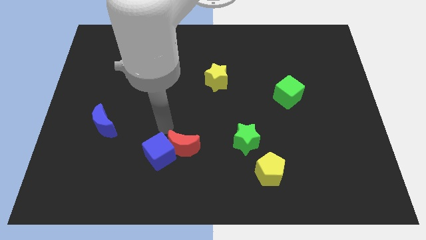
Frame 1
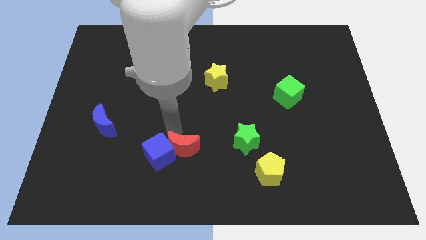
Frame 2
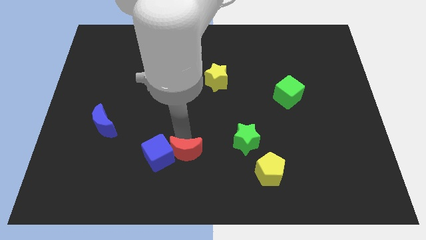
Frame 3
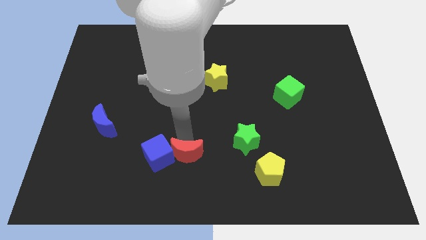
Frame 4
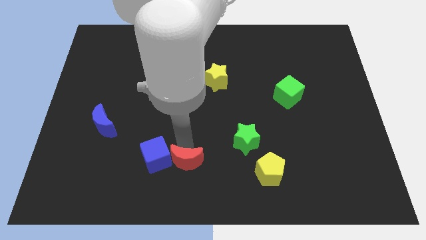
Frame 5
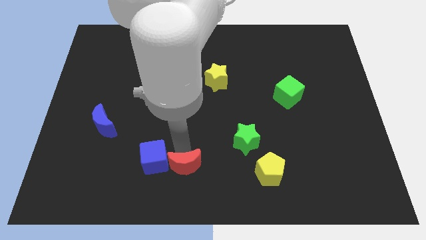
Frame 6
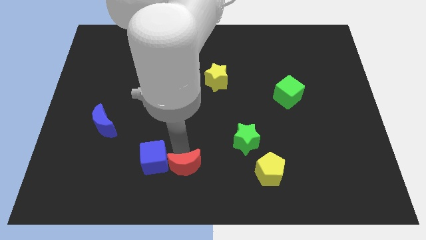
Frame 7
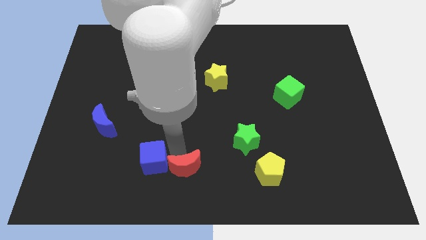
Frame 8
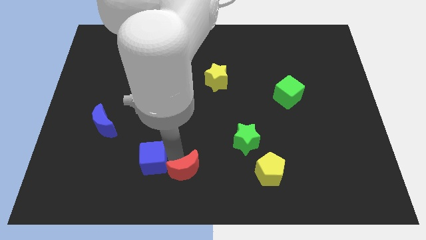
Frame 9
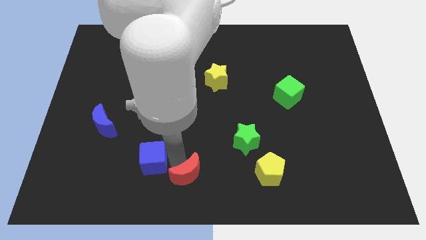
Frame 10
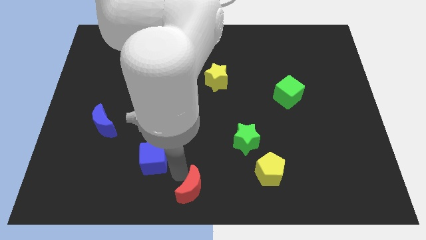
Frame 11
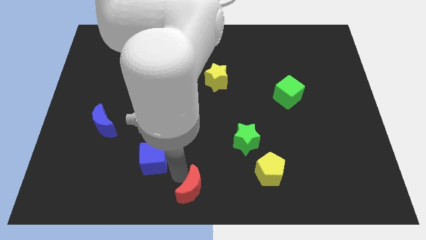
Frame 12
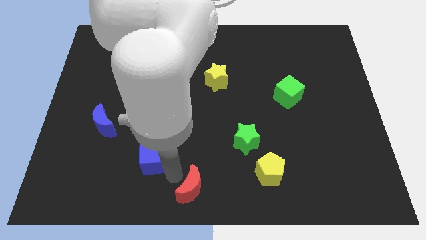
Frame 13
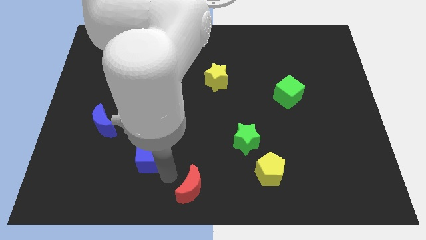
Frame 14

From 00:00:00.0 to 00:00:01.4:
push the blue cube and red moon towards the bottom side of the board

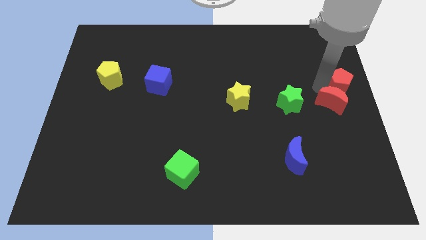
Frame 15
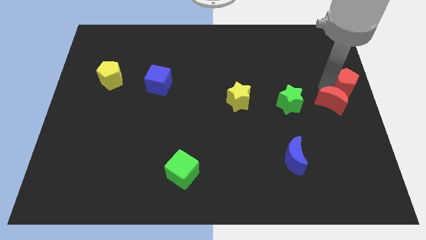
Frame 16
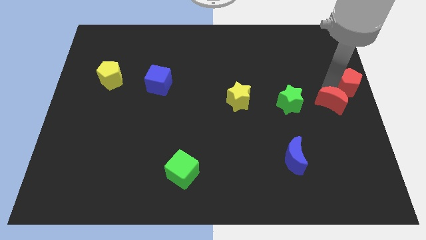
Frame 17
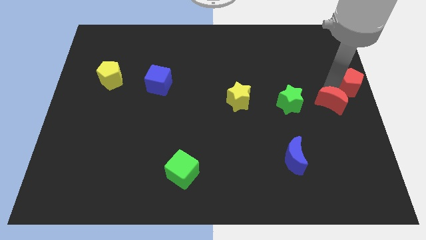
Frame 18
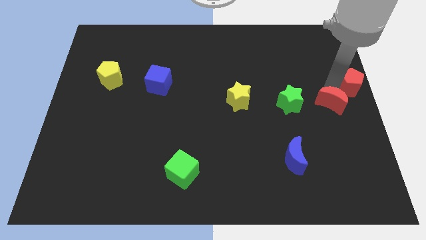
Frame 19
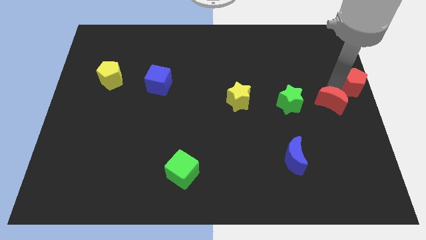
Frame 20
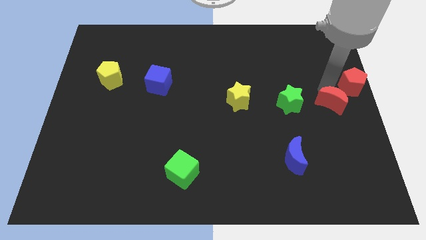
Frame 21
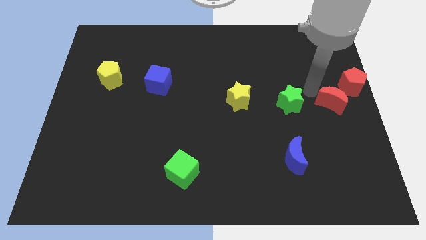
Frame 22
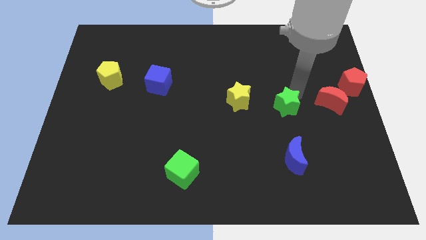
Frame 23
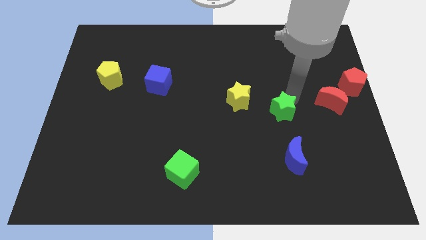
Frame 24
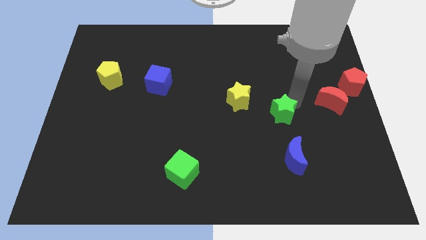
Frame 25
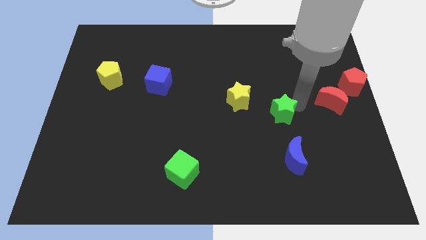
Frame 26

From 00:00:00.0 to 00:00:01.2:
push the green star slightly above the blue moon

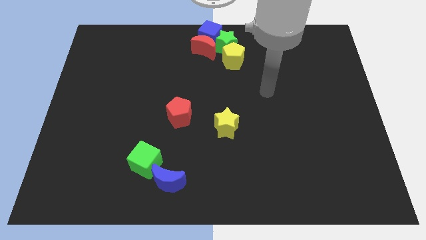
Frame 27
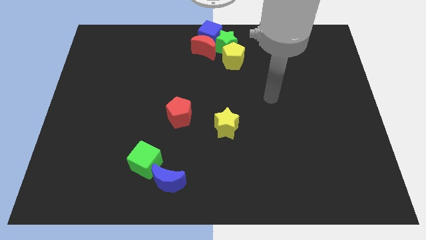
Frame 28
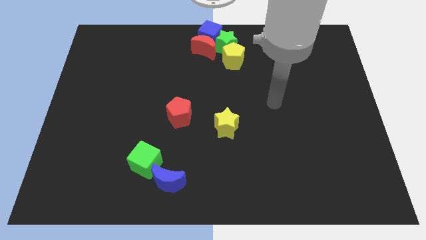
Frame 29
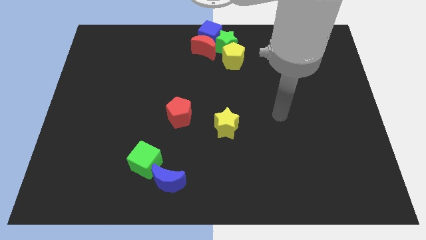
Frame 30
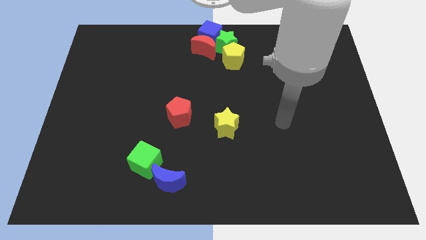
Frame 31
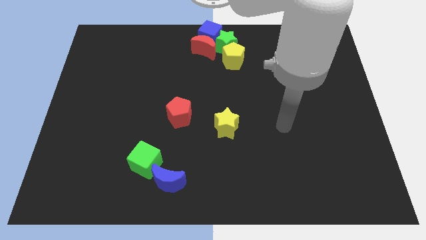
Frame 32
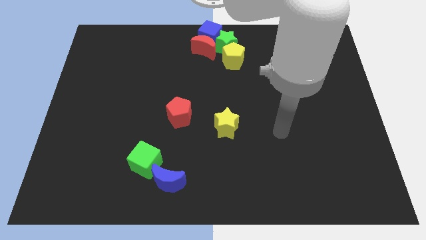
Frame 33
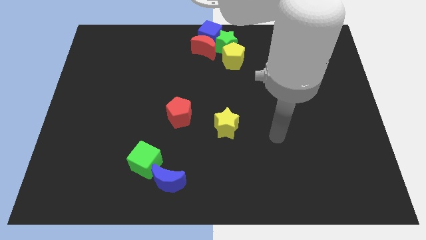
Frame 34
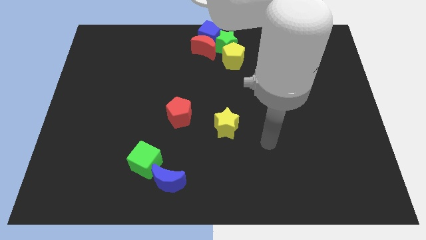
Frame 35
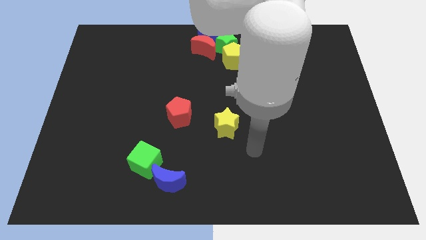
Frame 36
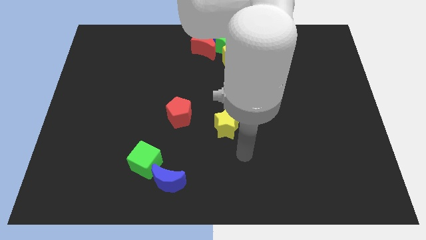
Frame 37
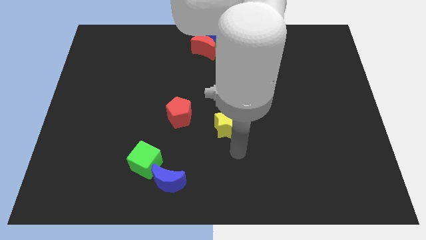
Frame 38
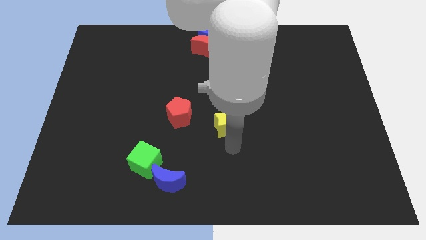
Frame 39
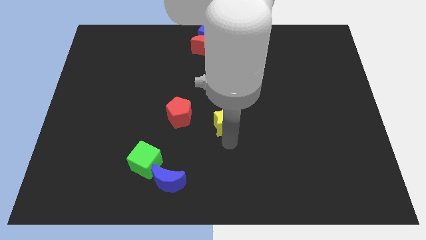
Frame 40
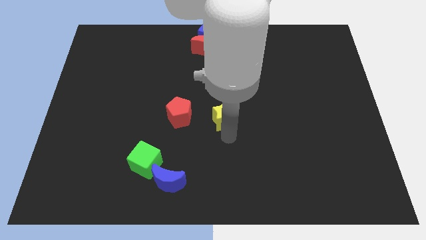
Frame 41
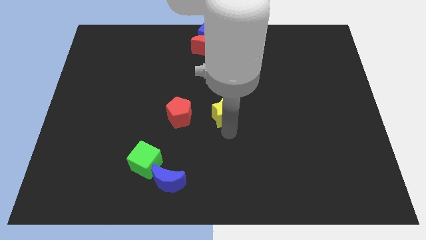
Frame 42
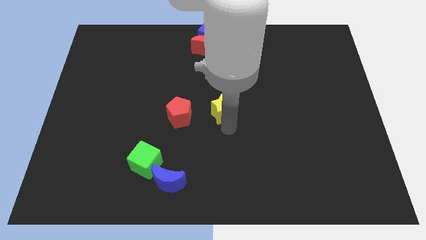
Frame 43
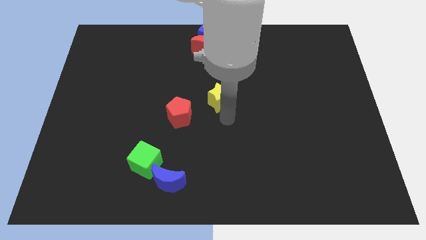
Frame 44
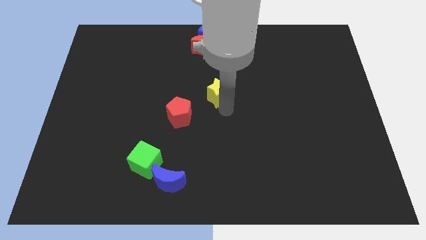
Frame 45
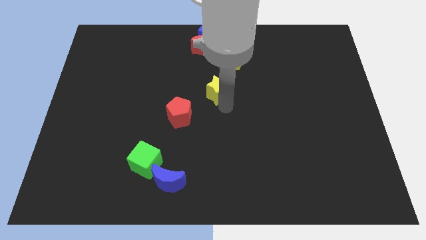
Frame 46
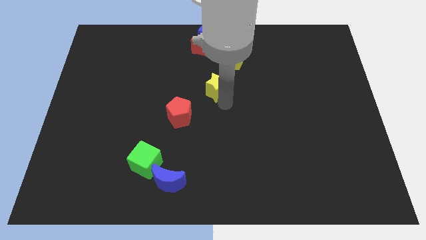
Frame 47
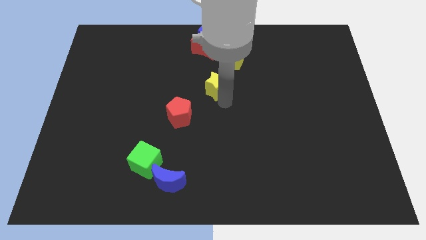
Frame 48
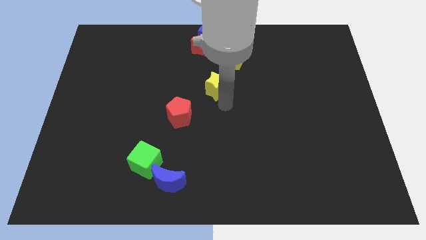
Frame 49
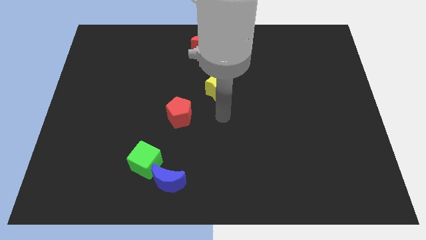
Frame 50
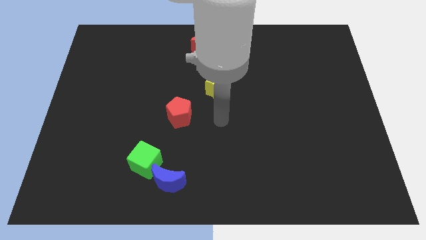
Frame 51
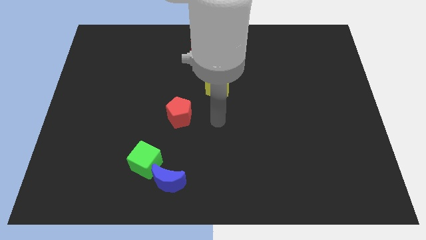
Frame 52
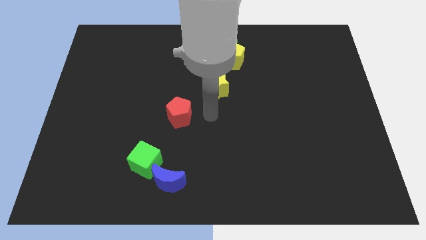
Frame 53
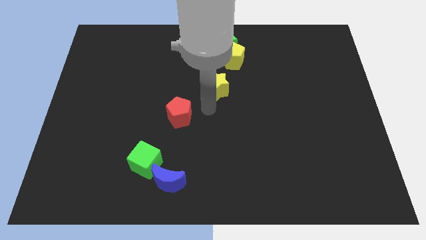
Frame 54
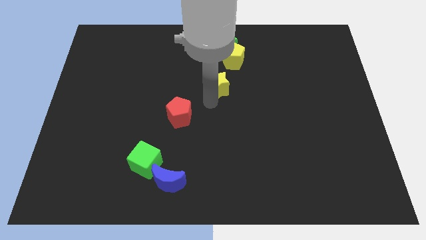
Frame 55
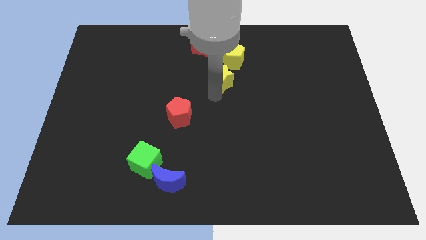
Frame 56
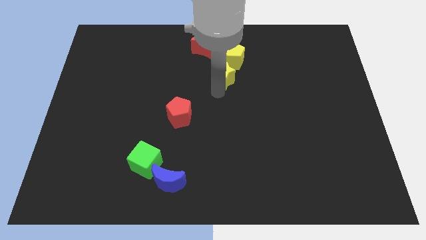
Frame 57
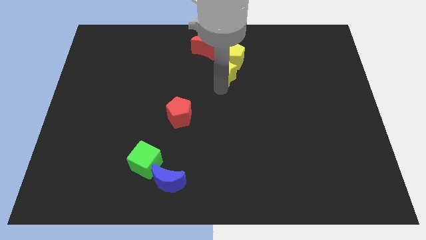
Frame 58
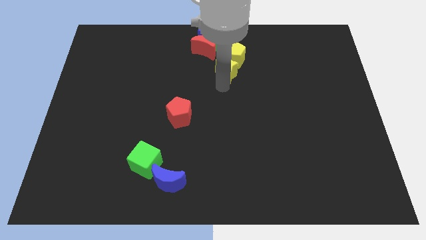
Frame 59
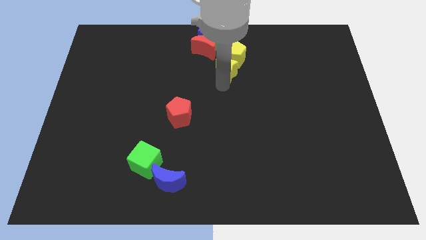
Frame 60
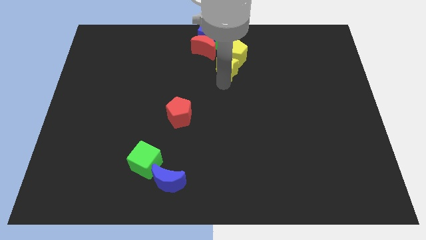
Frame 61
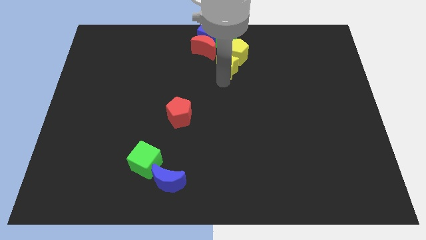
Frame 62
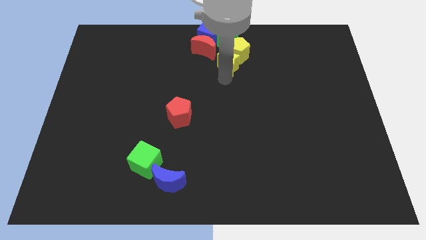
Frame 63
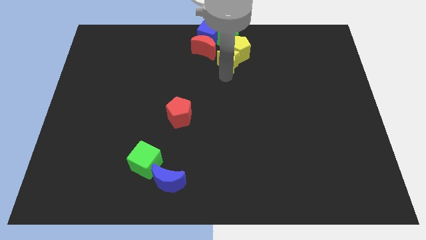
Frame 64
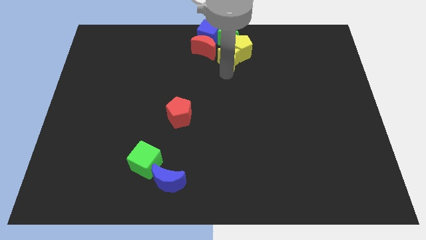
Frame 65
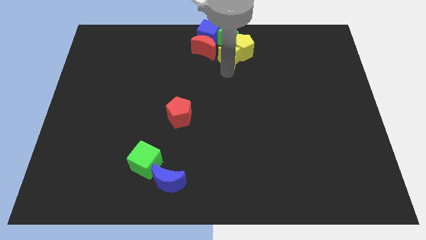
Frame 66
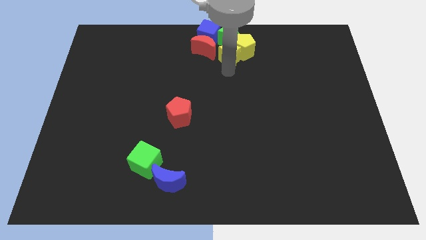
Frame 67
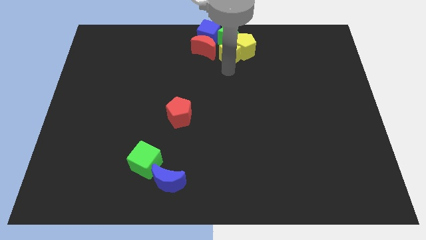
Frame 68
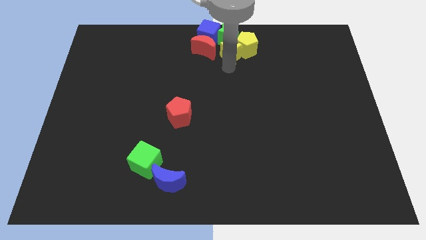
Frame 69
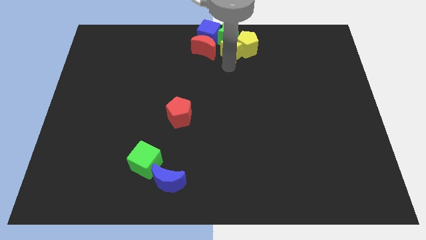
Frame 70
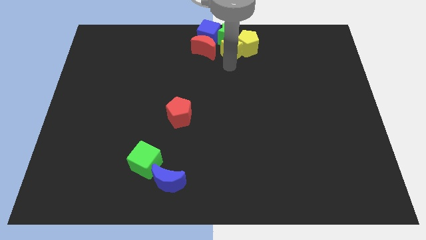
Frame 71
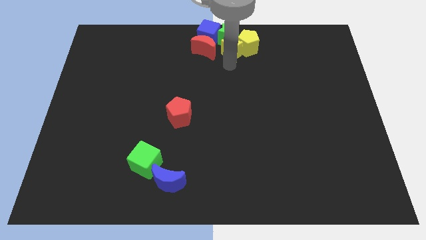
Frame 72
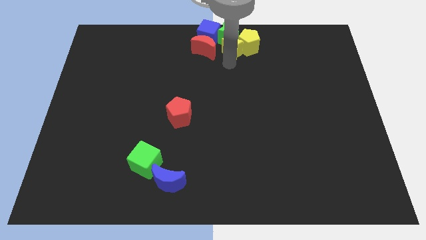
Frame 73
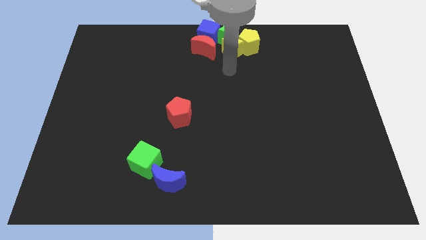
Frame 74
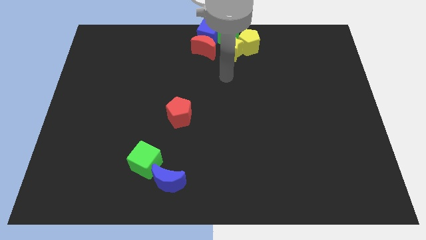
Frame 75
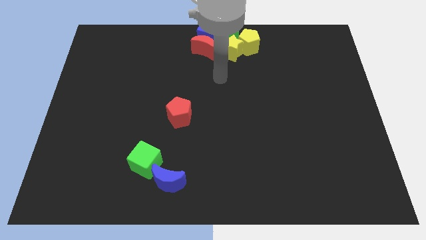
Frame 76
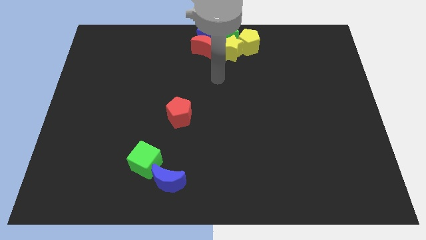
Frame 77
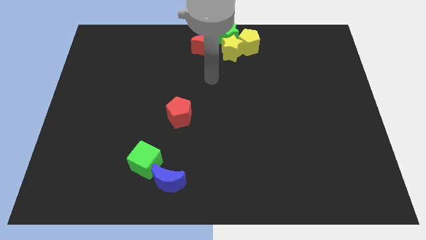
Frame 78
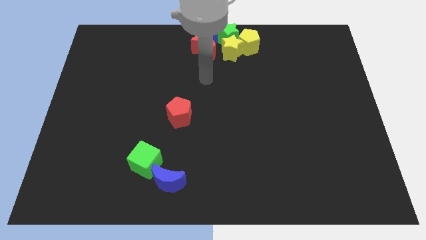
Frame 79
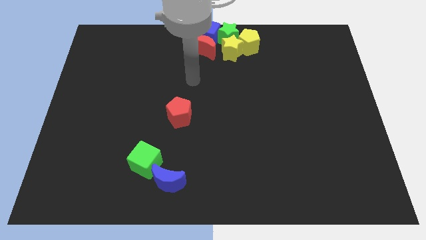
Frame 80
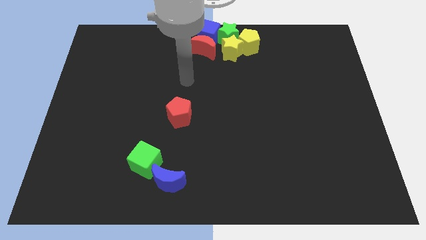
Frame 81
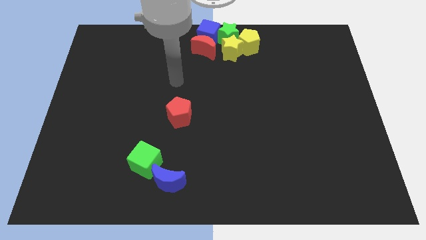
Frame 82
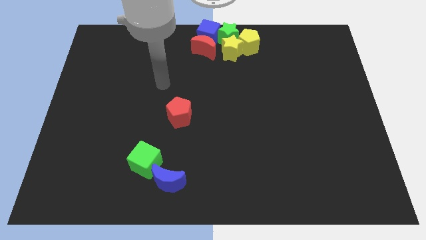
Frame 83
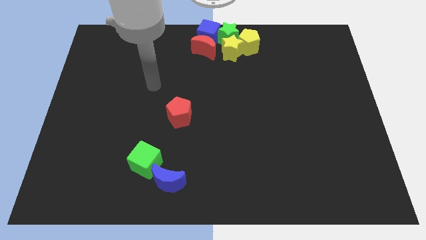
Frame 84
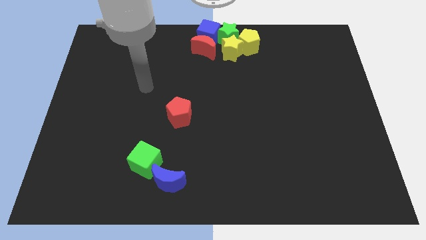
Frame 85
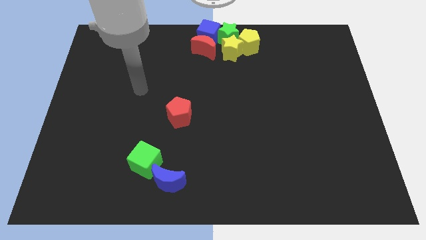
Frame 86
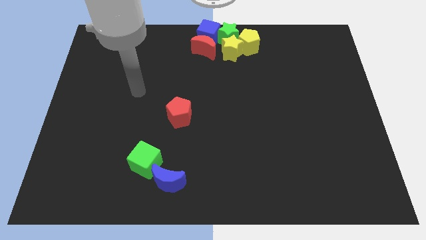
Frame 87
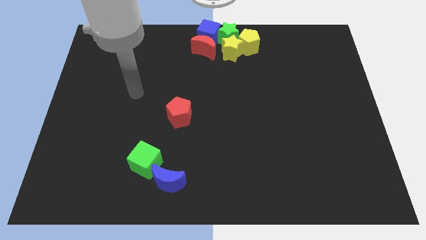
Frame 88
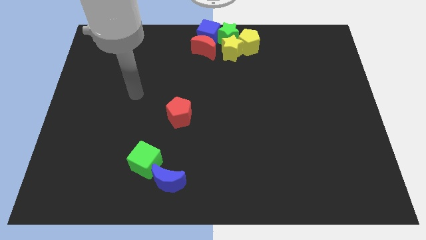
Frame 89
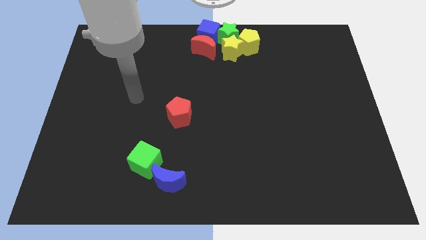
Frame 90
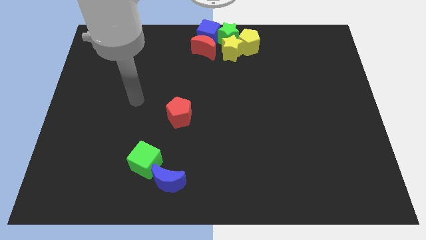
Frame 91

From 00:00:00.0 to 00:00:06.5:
place the yellow star to right of the red crescent
